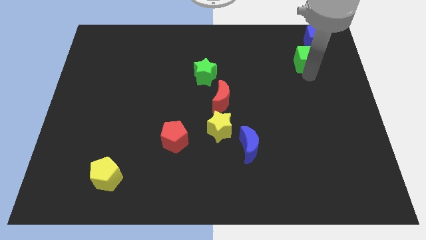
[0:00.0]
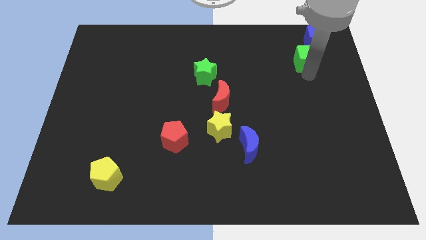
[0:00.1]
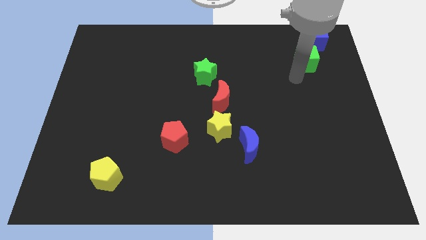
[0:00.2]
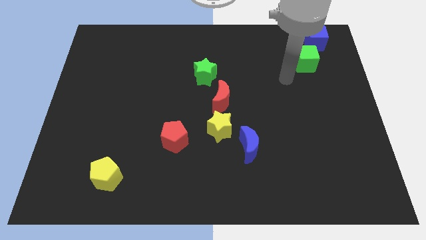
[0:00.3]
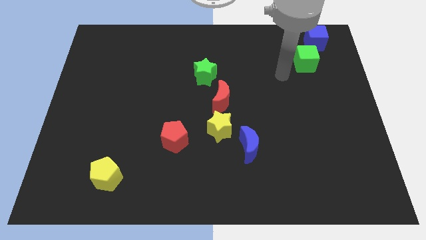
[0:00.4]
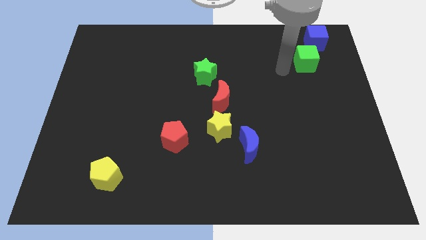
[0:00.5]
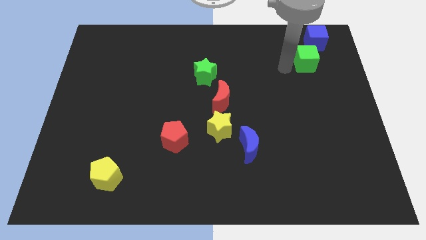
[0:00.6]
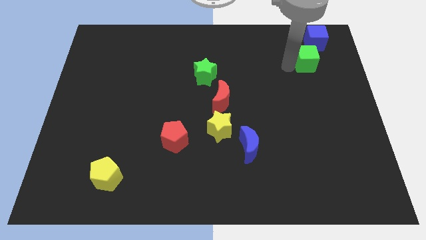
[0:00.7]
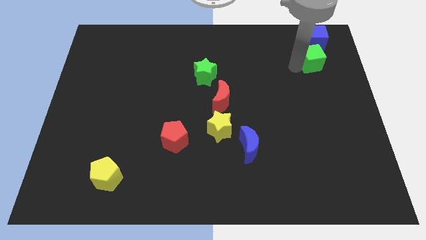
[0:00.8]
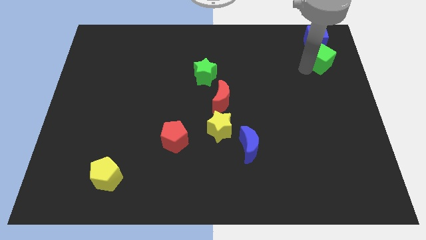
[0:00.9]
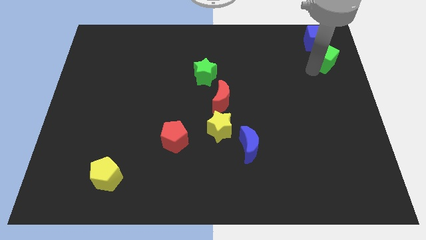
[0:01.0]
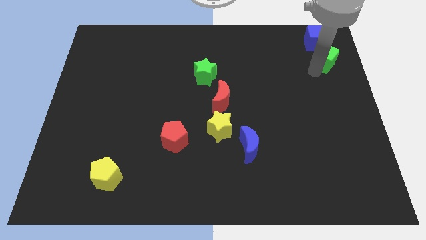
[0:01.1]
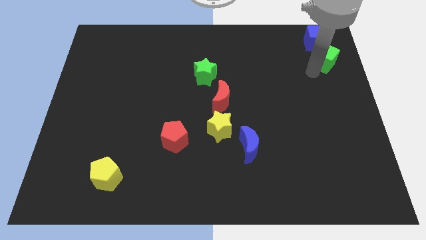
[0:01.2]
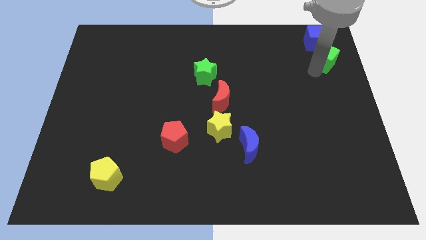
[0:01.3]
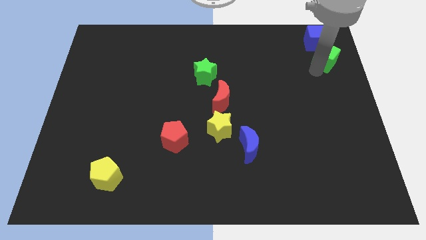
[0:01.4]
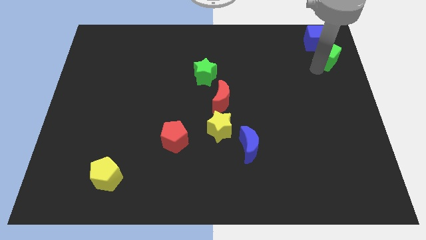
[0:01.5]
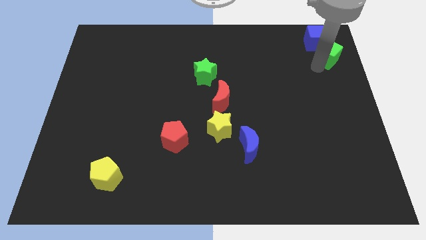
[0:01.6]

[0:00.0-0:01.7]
place the green cube below the blue cube

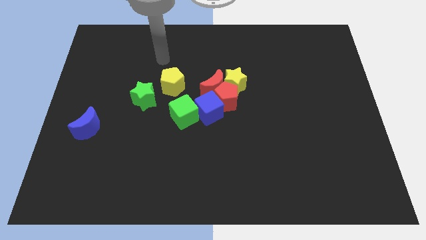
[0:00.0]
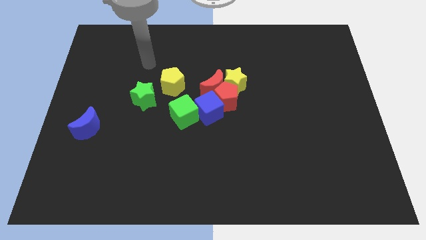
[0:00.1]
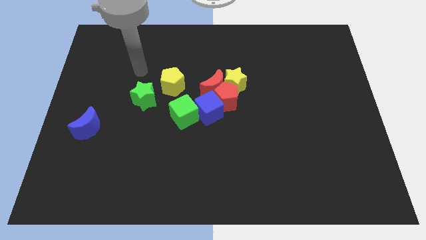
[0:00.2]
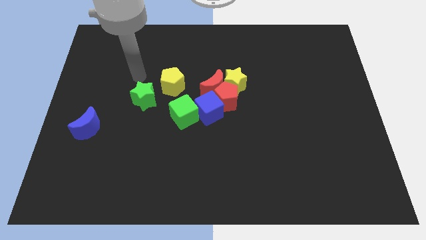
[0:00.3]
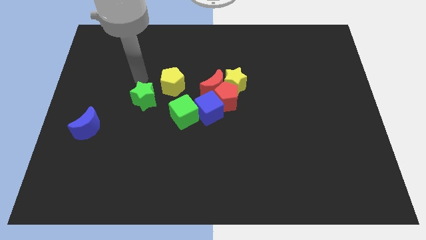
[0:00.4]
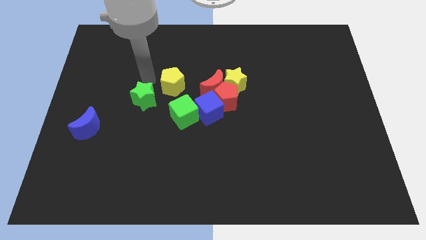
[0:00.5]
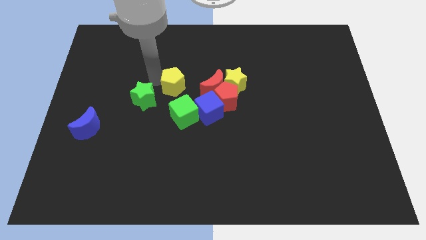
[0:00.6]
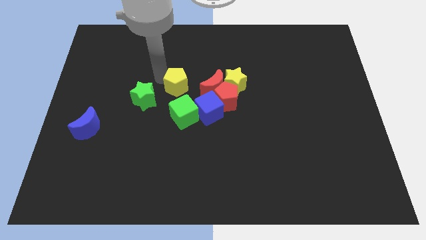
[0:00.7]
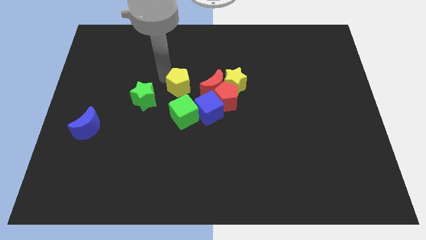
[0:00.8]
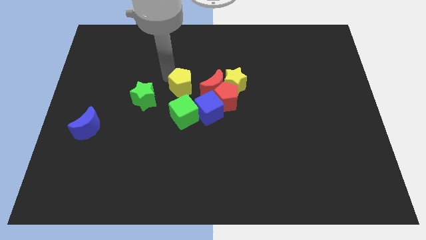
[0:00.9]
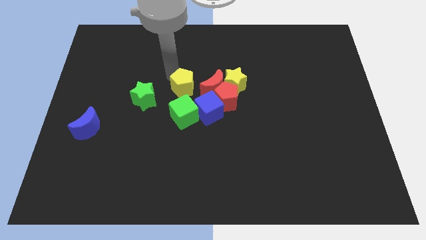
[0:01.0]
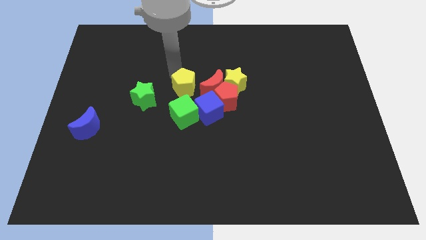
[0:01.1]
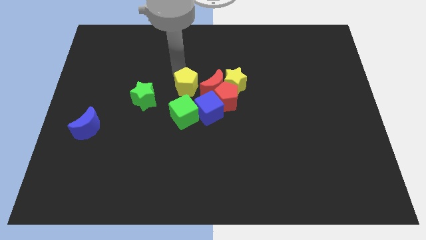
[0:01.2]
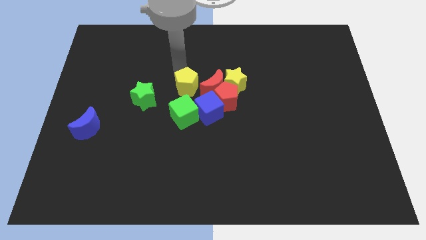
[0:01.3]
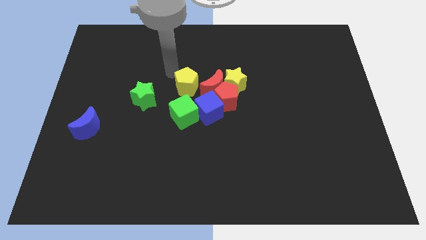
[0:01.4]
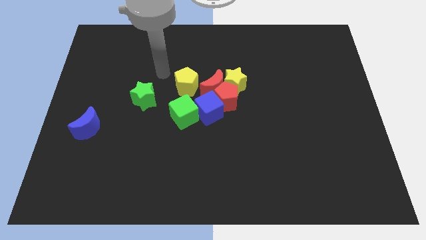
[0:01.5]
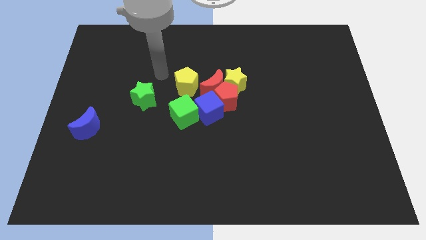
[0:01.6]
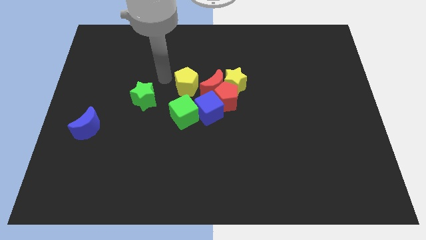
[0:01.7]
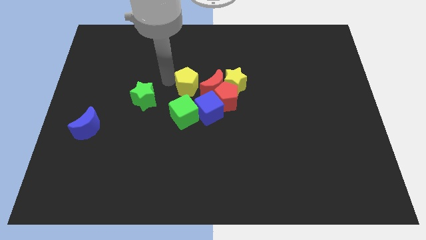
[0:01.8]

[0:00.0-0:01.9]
place the yellow pentagon towards the left side of the red pentagon

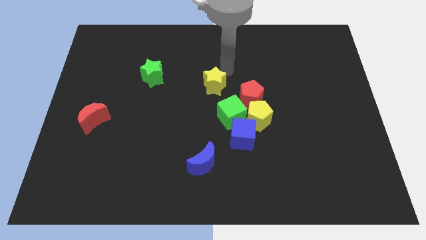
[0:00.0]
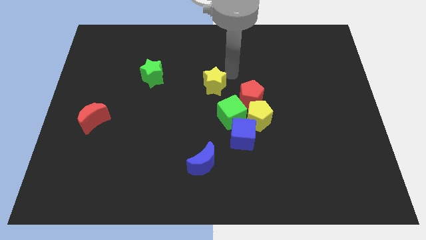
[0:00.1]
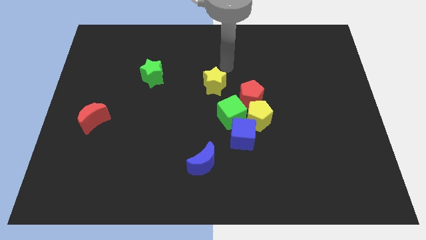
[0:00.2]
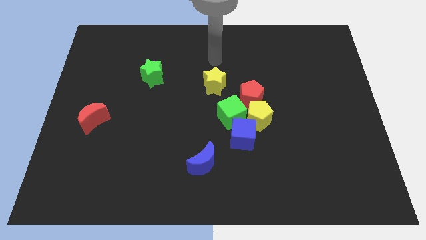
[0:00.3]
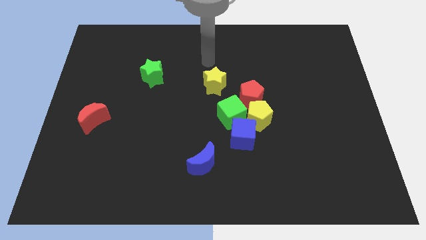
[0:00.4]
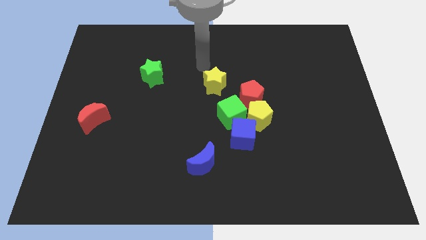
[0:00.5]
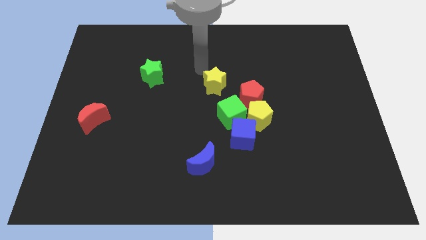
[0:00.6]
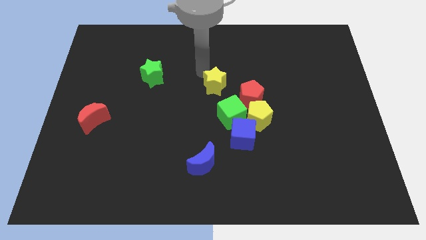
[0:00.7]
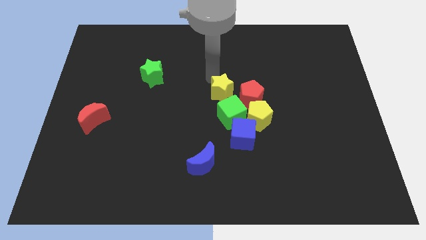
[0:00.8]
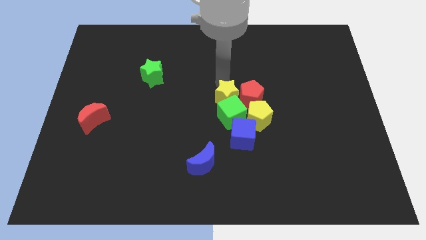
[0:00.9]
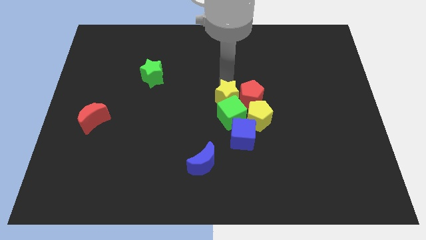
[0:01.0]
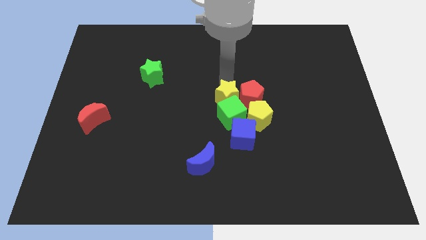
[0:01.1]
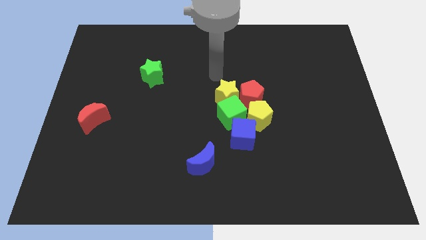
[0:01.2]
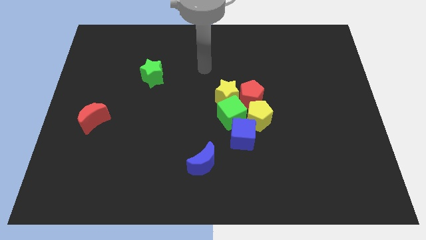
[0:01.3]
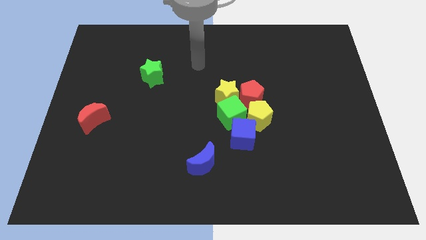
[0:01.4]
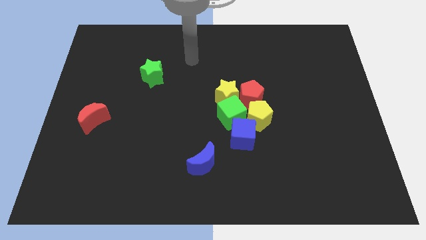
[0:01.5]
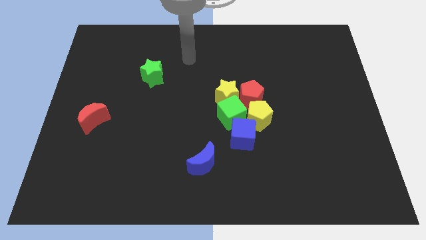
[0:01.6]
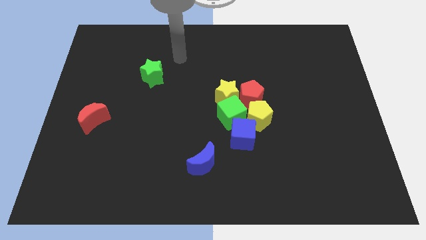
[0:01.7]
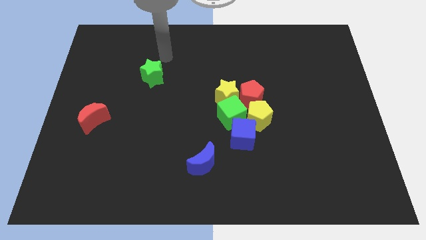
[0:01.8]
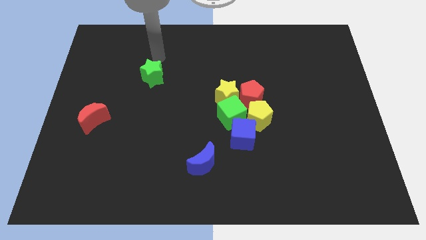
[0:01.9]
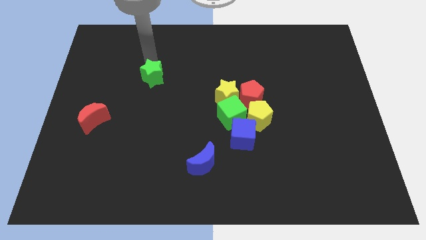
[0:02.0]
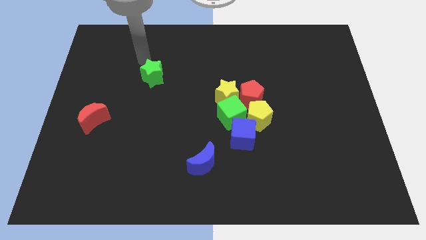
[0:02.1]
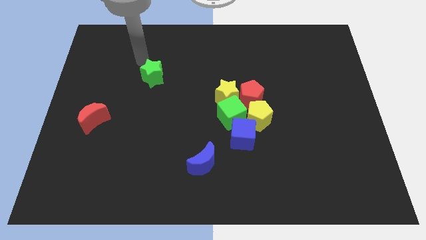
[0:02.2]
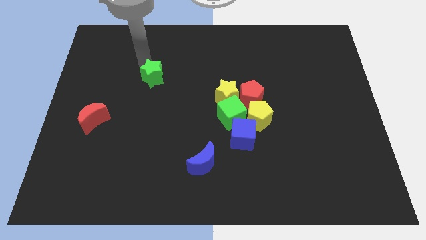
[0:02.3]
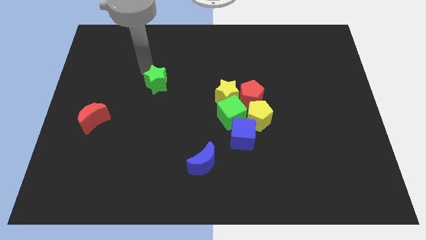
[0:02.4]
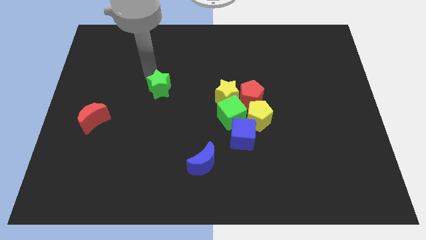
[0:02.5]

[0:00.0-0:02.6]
move your arm towards the top of the green star

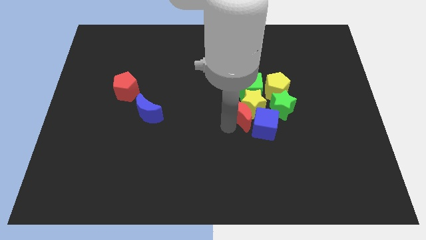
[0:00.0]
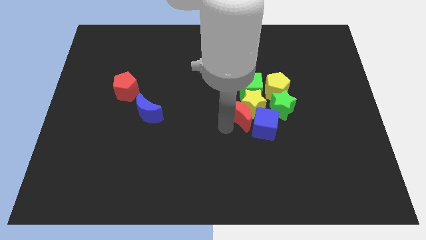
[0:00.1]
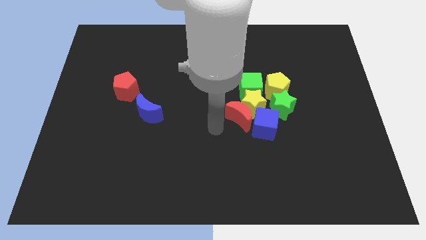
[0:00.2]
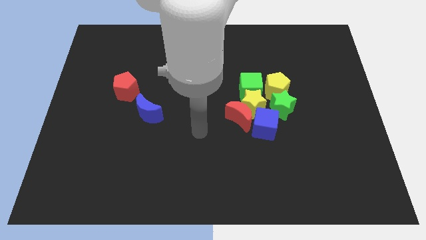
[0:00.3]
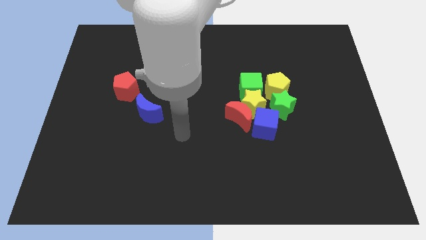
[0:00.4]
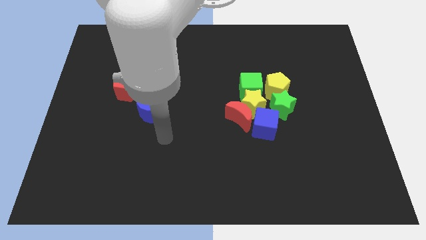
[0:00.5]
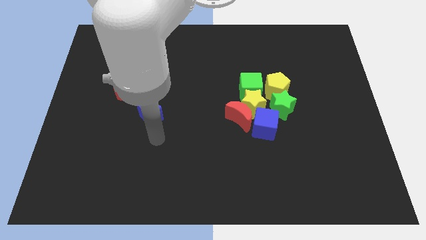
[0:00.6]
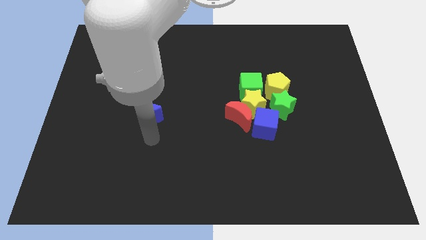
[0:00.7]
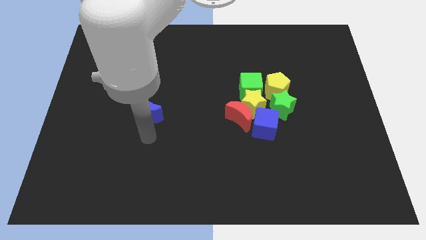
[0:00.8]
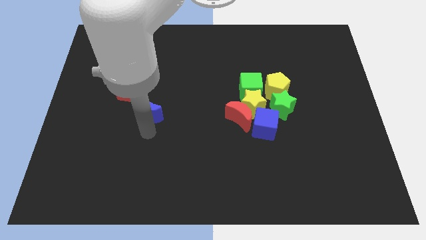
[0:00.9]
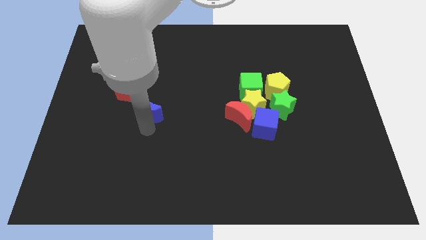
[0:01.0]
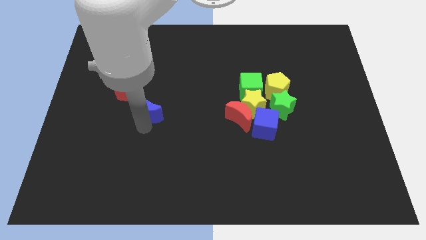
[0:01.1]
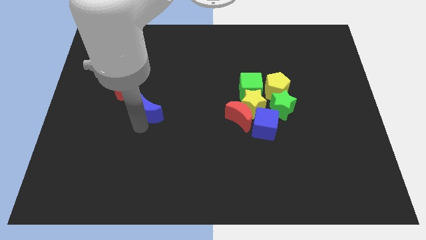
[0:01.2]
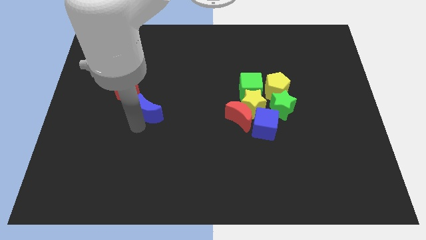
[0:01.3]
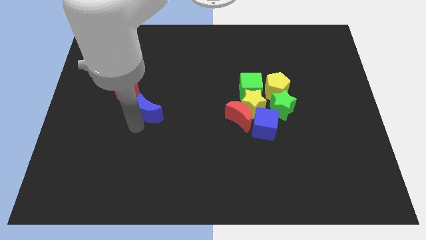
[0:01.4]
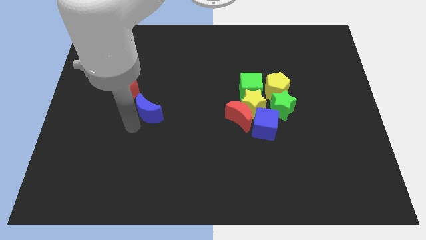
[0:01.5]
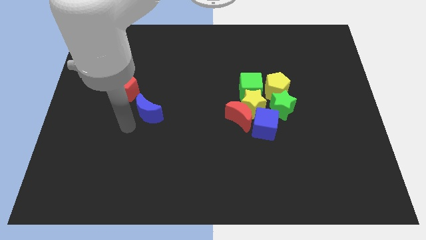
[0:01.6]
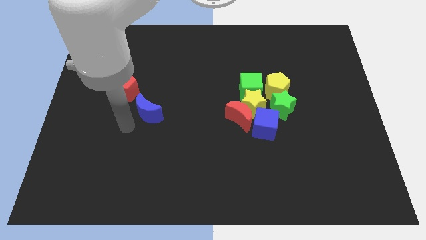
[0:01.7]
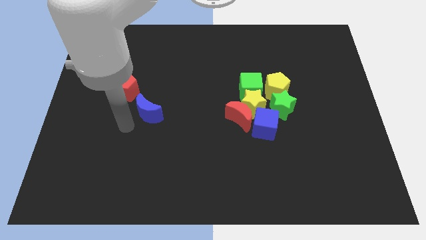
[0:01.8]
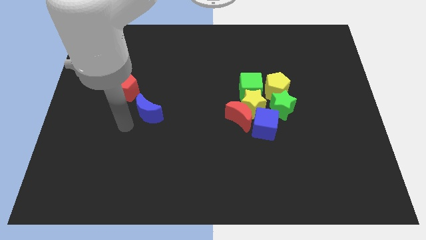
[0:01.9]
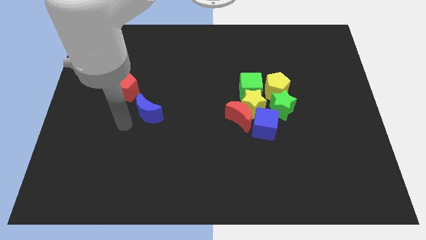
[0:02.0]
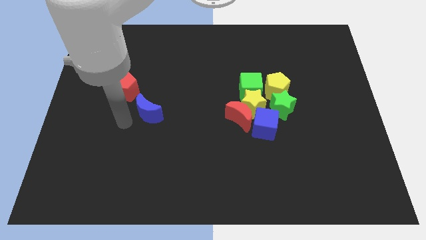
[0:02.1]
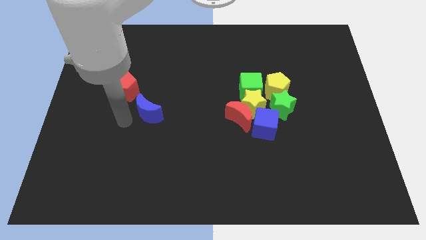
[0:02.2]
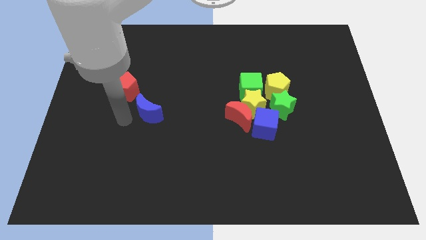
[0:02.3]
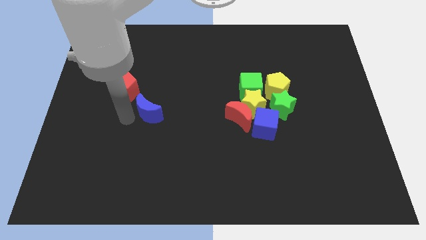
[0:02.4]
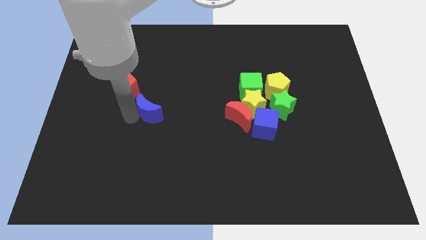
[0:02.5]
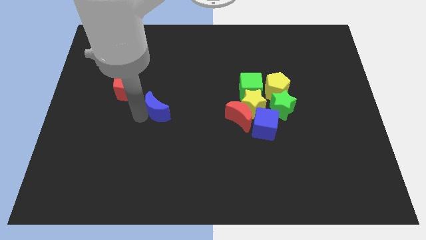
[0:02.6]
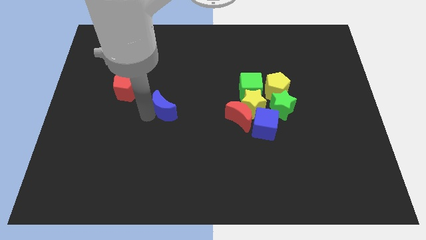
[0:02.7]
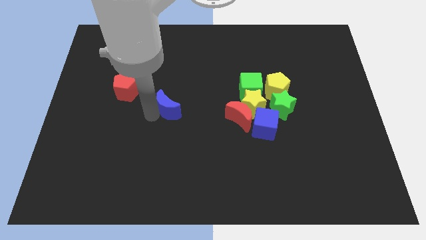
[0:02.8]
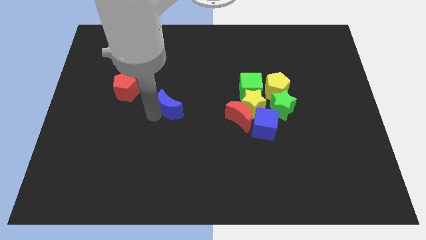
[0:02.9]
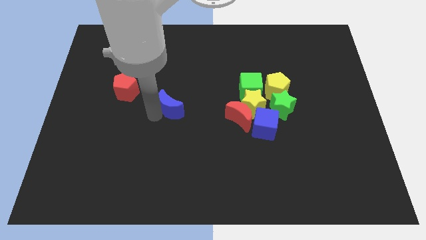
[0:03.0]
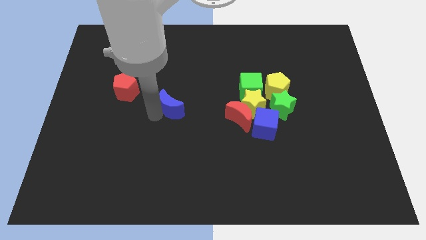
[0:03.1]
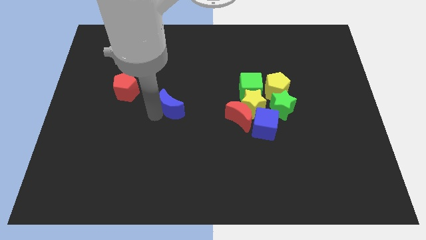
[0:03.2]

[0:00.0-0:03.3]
slide the blue moon away from the red pentagon
